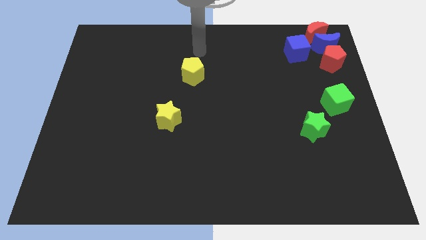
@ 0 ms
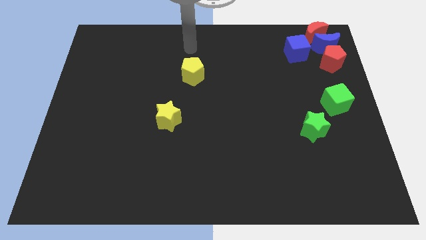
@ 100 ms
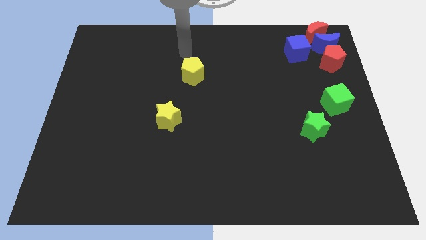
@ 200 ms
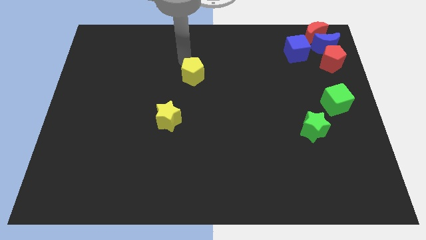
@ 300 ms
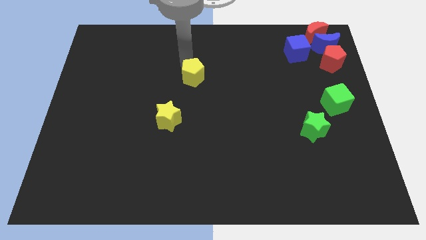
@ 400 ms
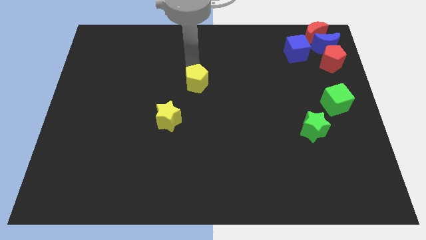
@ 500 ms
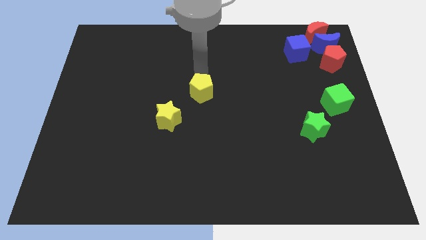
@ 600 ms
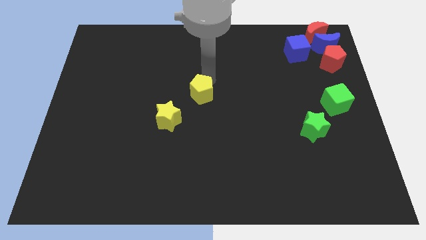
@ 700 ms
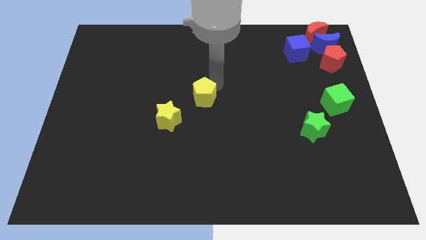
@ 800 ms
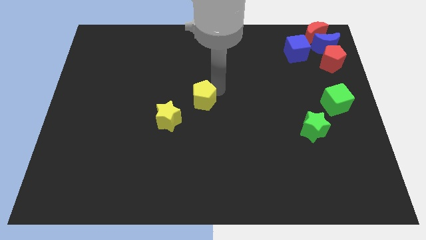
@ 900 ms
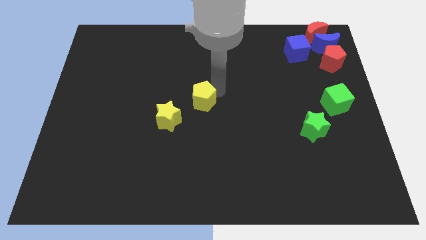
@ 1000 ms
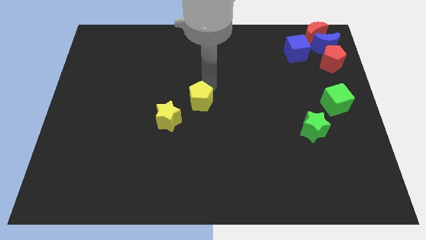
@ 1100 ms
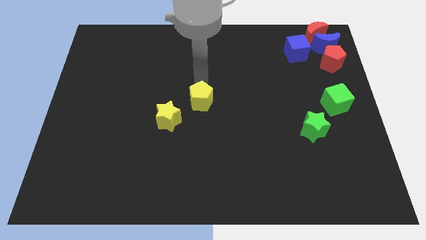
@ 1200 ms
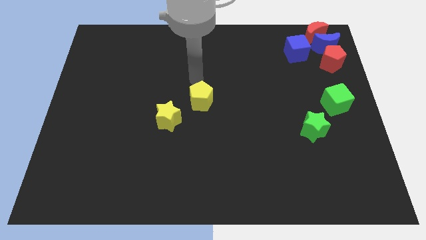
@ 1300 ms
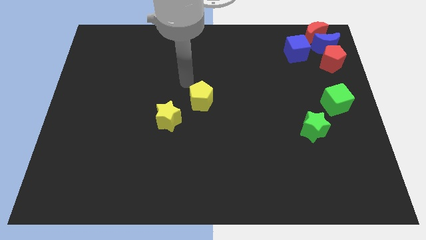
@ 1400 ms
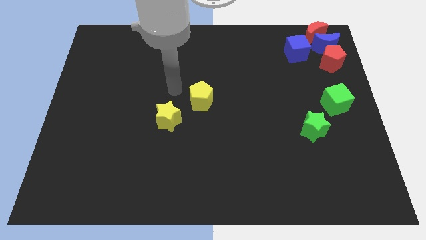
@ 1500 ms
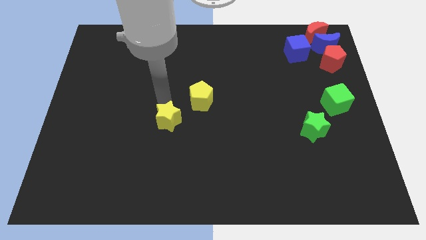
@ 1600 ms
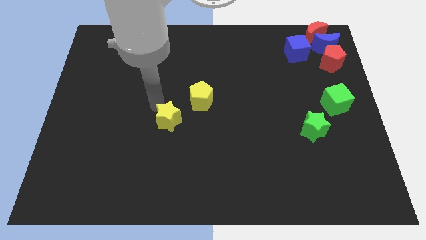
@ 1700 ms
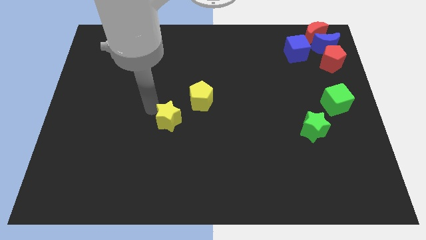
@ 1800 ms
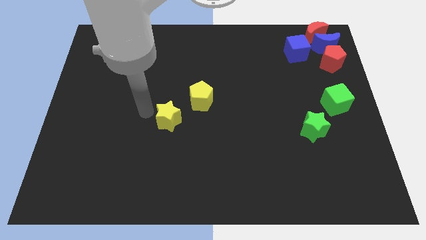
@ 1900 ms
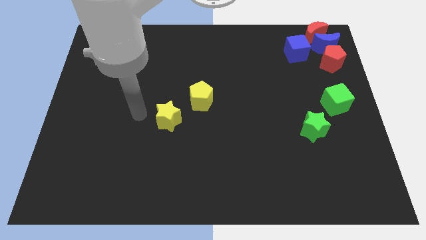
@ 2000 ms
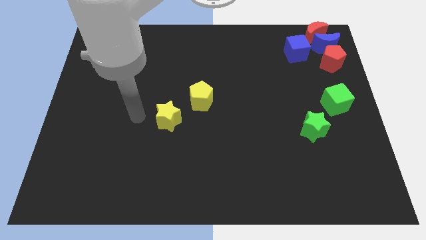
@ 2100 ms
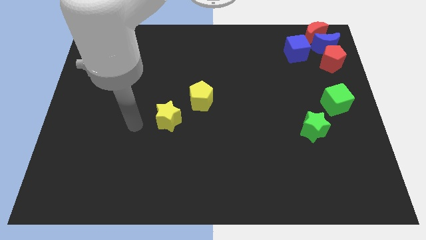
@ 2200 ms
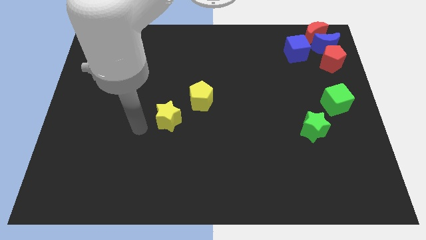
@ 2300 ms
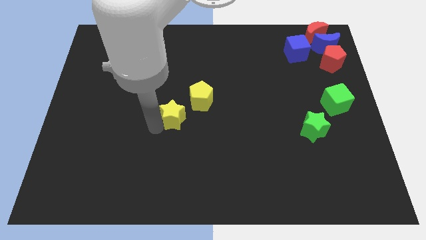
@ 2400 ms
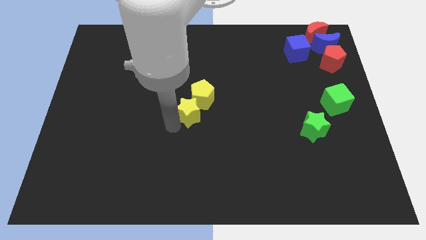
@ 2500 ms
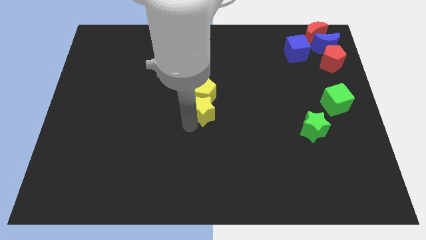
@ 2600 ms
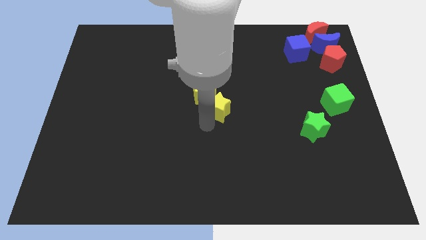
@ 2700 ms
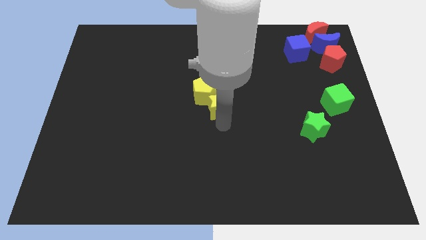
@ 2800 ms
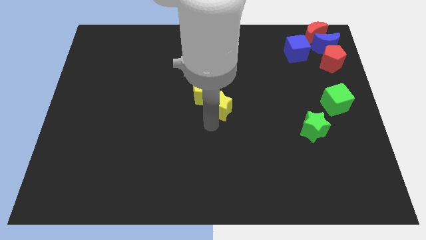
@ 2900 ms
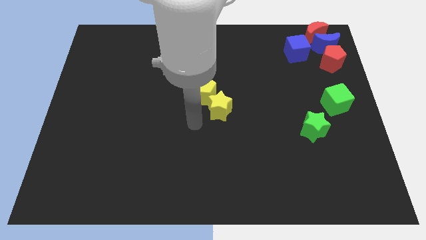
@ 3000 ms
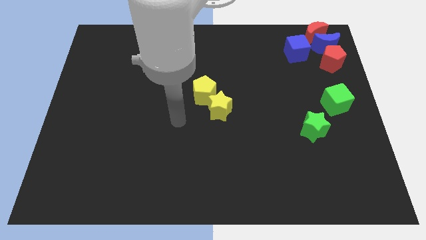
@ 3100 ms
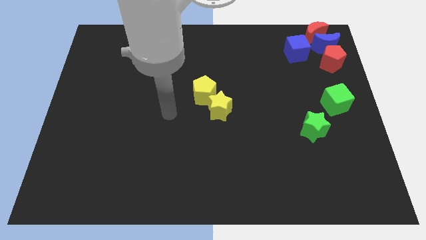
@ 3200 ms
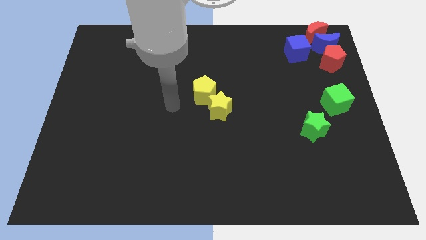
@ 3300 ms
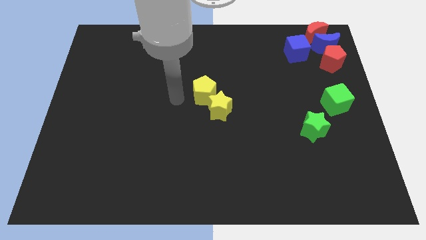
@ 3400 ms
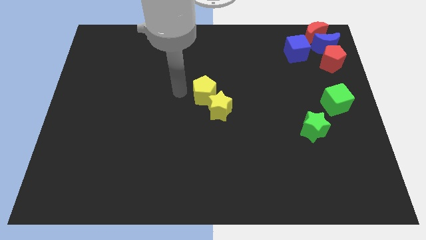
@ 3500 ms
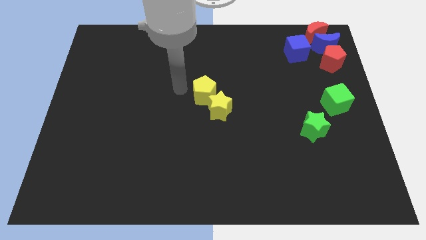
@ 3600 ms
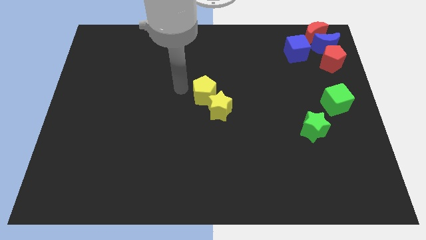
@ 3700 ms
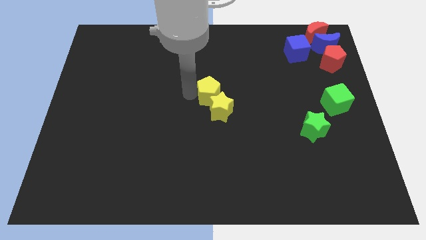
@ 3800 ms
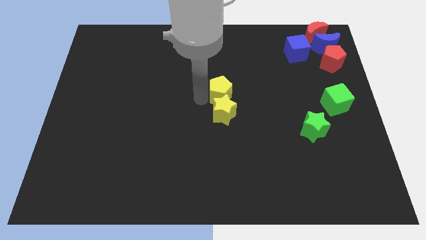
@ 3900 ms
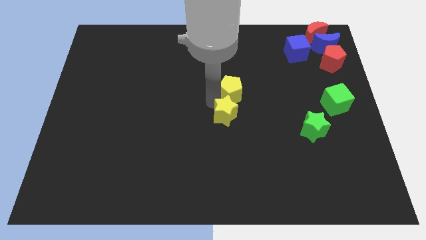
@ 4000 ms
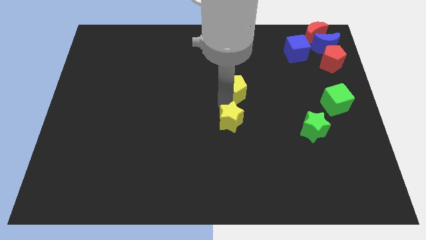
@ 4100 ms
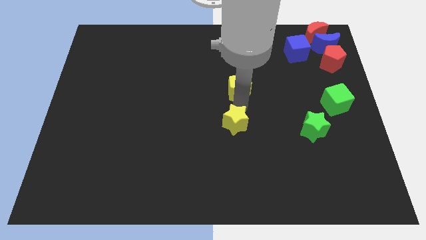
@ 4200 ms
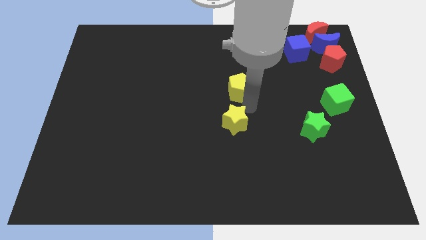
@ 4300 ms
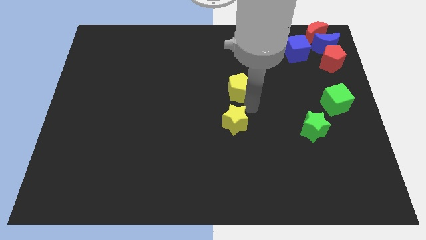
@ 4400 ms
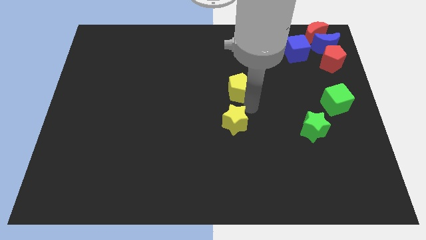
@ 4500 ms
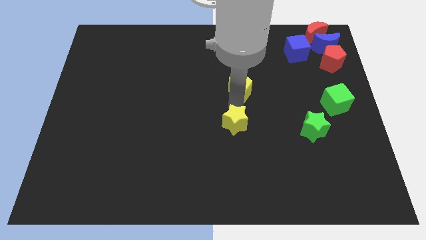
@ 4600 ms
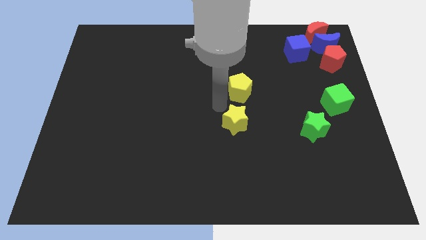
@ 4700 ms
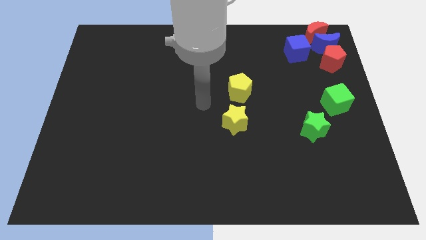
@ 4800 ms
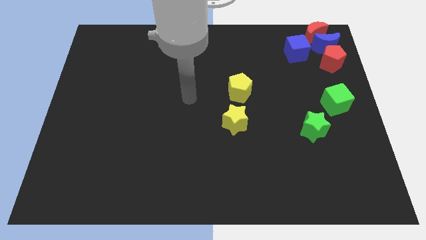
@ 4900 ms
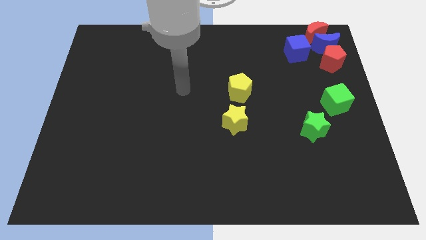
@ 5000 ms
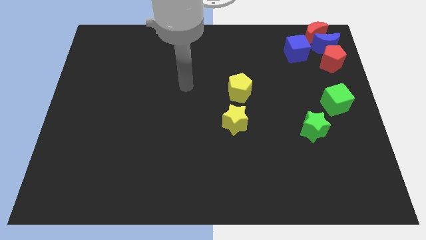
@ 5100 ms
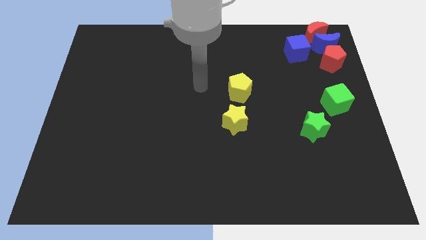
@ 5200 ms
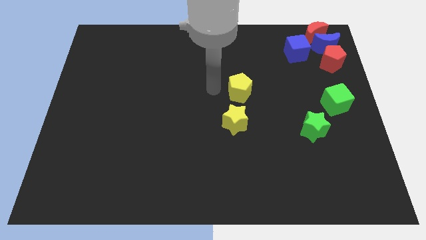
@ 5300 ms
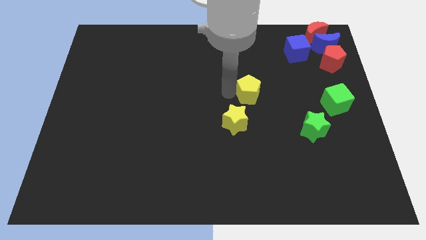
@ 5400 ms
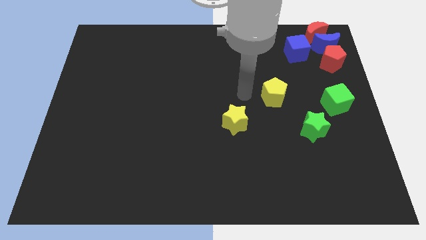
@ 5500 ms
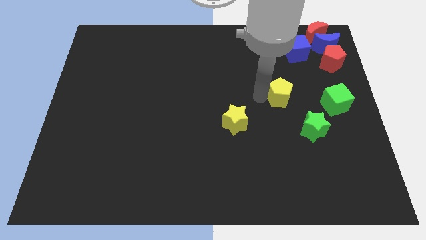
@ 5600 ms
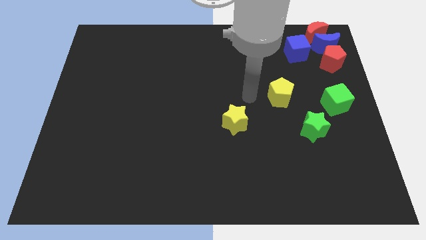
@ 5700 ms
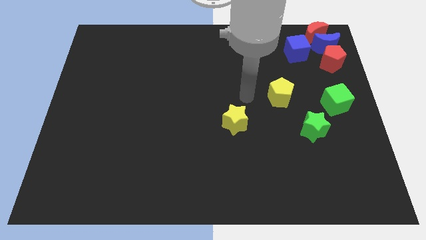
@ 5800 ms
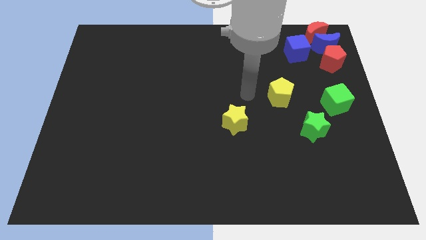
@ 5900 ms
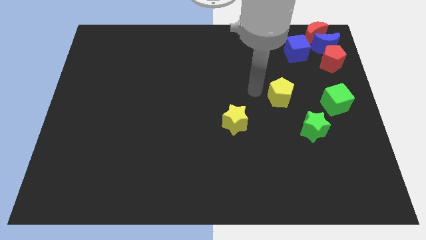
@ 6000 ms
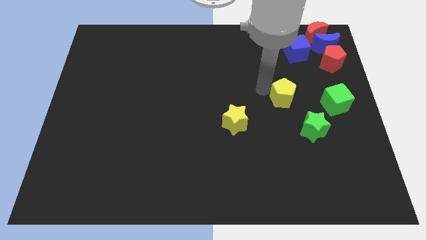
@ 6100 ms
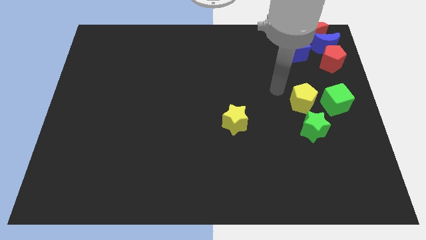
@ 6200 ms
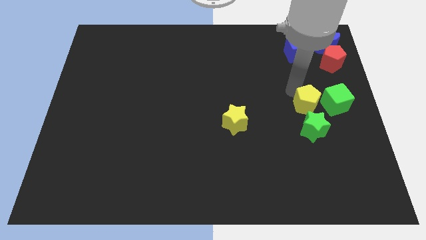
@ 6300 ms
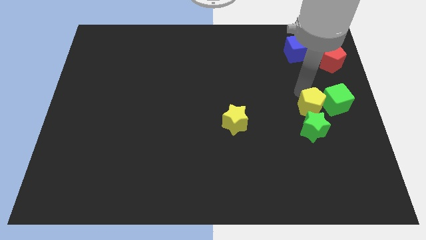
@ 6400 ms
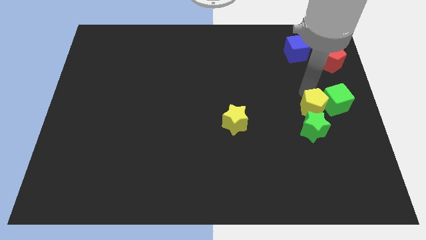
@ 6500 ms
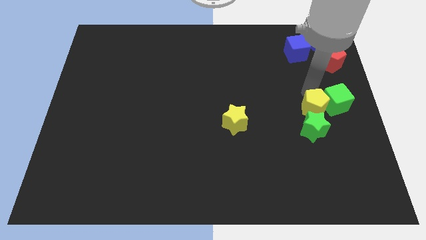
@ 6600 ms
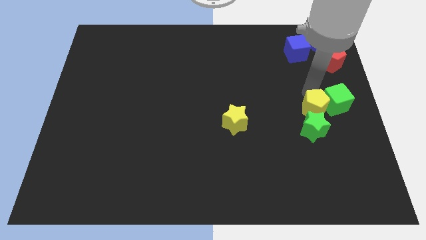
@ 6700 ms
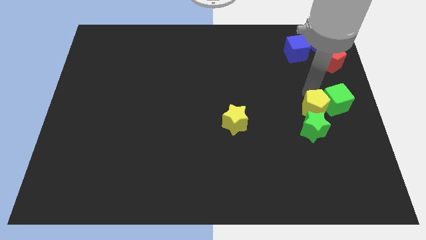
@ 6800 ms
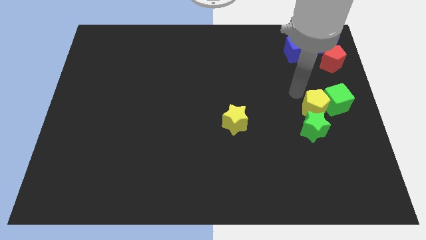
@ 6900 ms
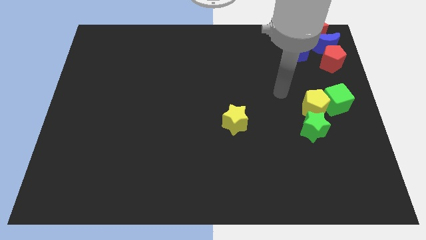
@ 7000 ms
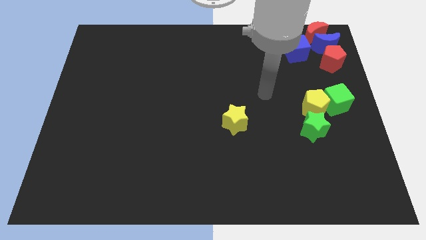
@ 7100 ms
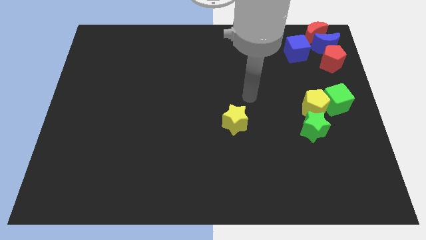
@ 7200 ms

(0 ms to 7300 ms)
push the yellow pentagon in between green cube and green star

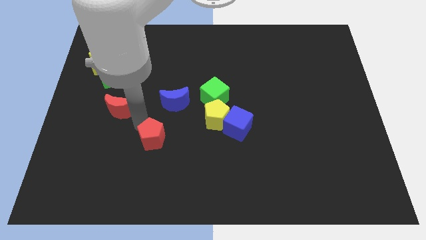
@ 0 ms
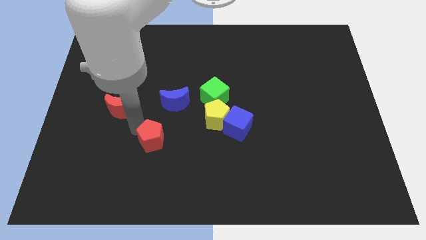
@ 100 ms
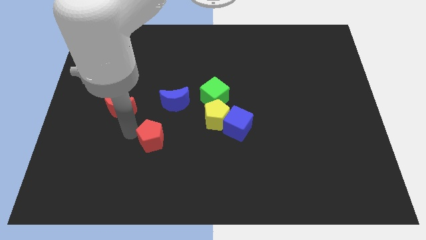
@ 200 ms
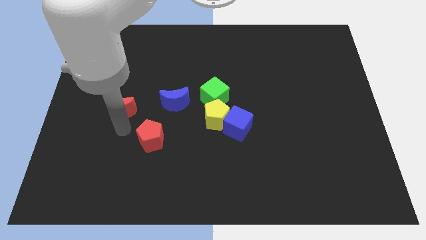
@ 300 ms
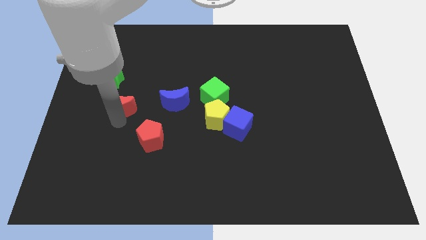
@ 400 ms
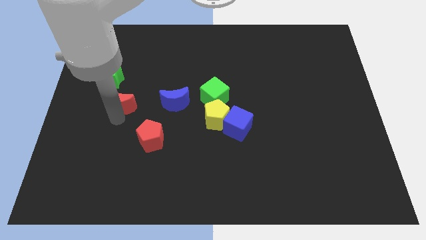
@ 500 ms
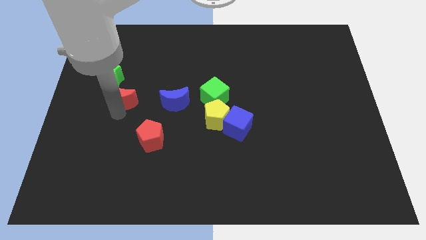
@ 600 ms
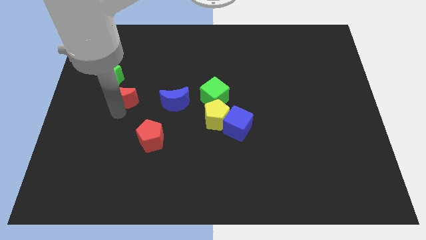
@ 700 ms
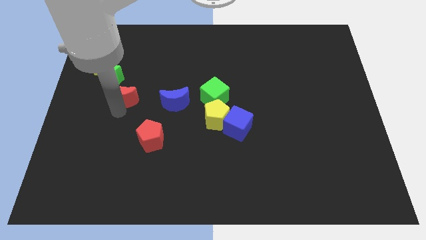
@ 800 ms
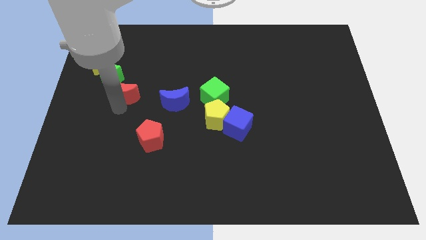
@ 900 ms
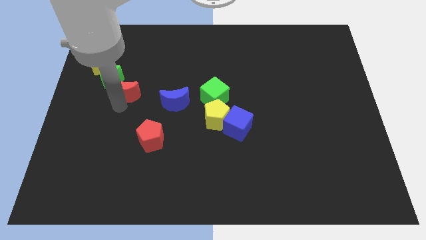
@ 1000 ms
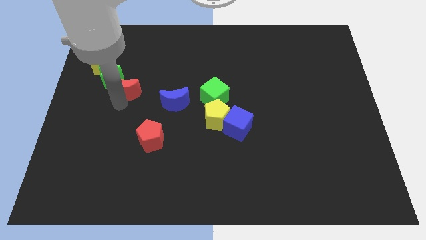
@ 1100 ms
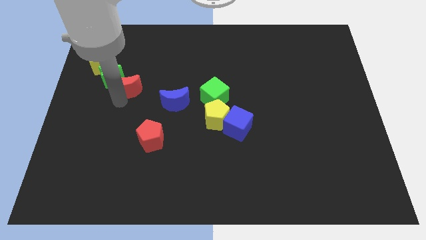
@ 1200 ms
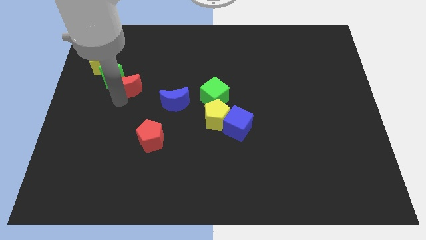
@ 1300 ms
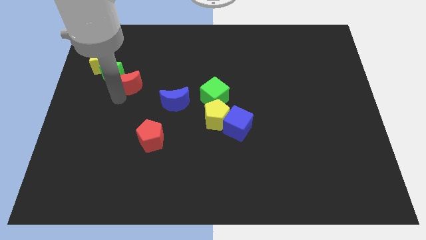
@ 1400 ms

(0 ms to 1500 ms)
push red moon below green star
